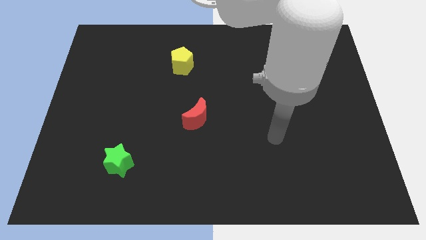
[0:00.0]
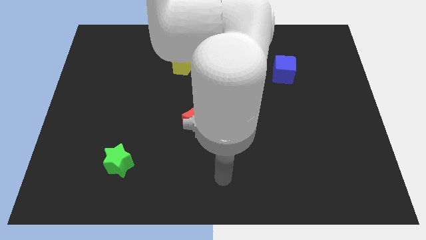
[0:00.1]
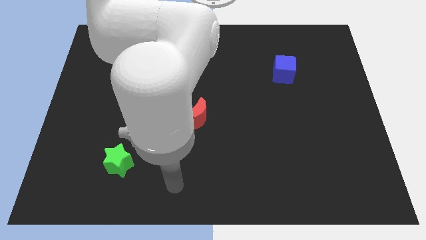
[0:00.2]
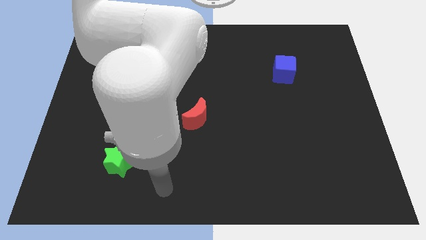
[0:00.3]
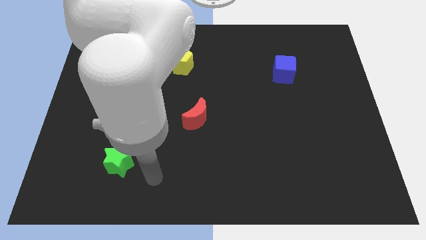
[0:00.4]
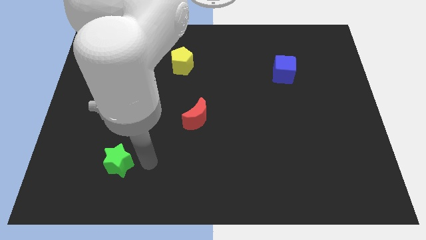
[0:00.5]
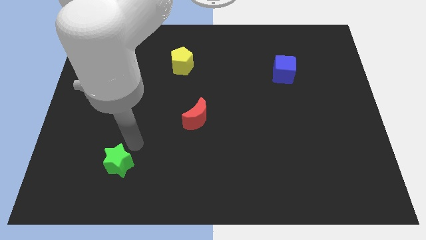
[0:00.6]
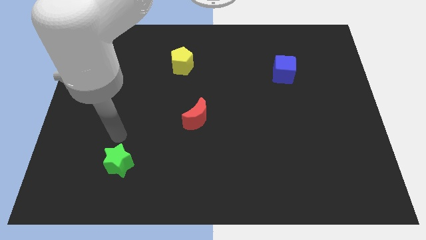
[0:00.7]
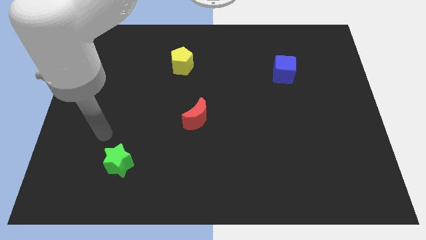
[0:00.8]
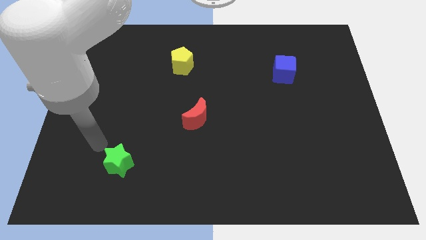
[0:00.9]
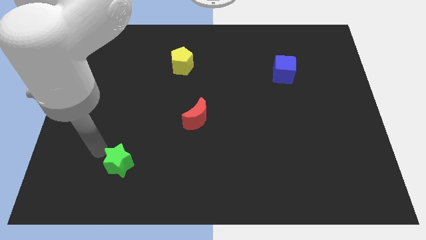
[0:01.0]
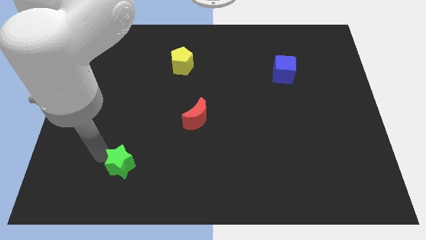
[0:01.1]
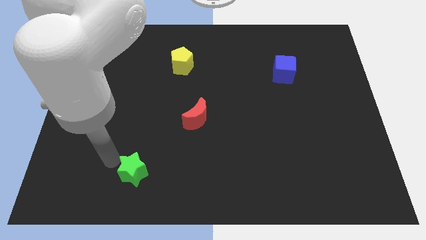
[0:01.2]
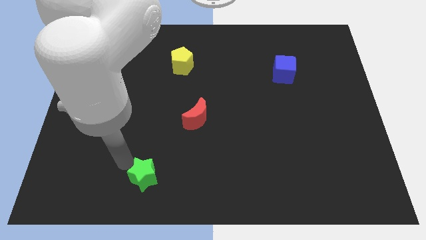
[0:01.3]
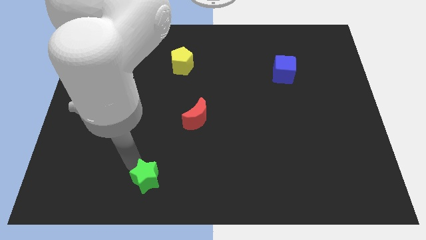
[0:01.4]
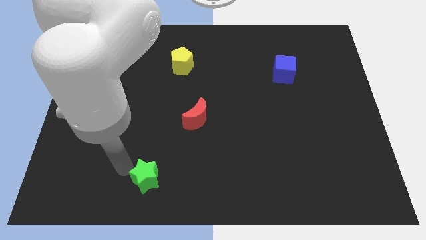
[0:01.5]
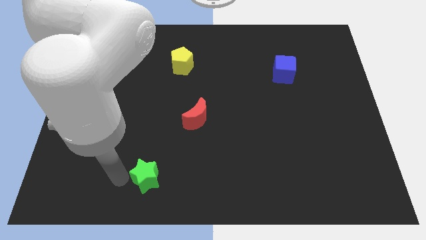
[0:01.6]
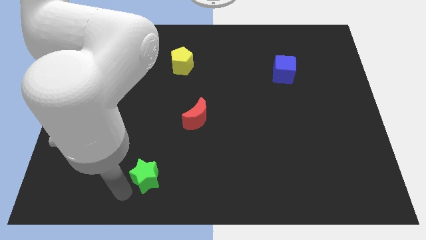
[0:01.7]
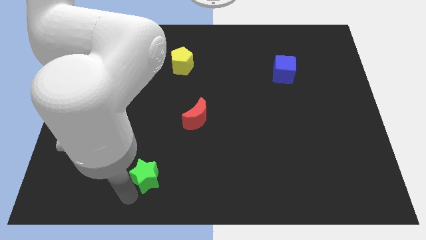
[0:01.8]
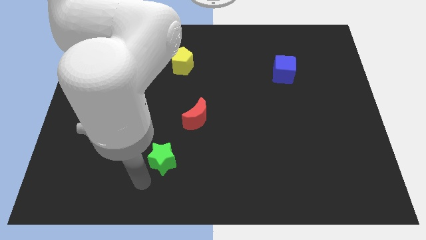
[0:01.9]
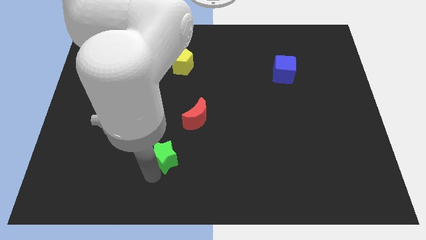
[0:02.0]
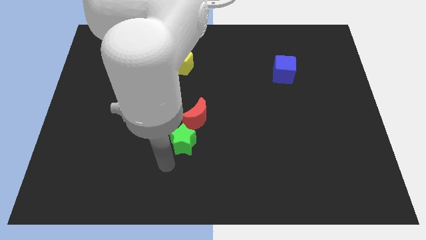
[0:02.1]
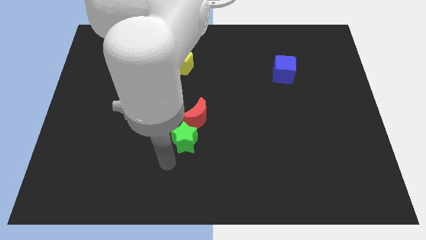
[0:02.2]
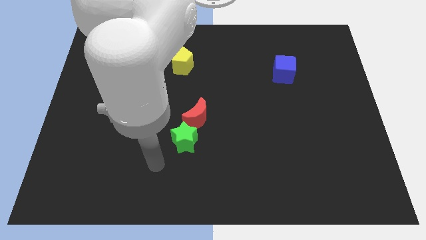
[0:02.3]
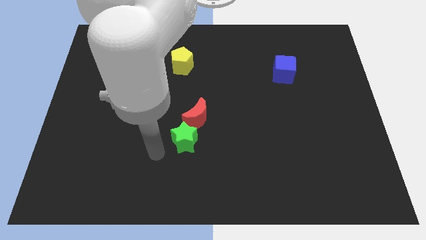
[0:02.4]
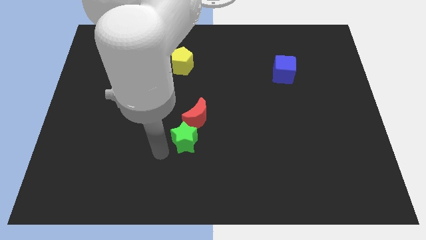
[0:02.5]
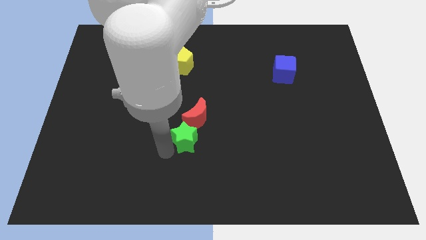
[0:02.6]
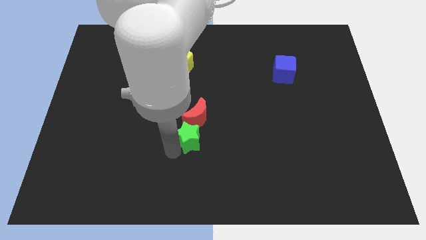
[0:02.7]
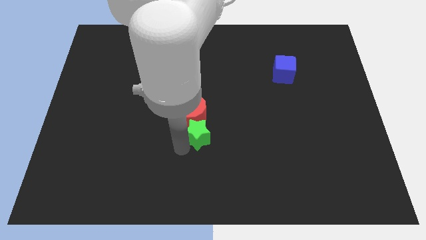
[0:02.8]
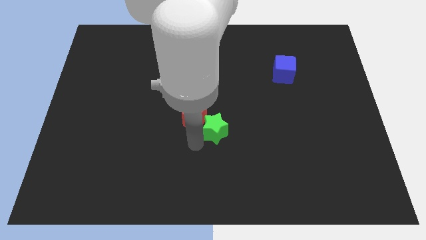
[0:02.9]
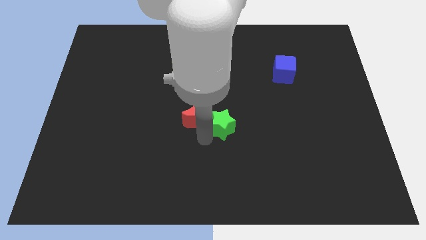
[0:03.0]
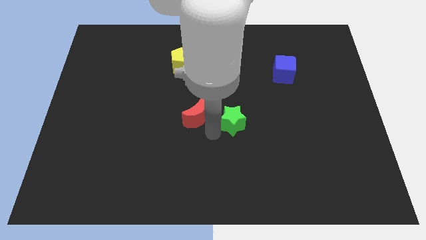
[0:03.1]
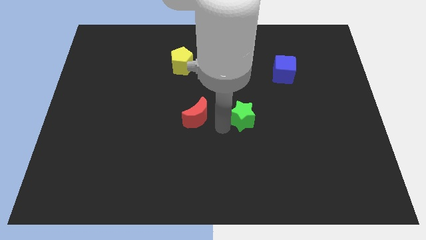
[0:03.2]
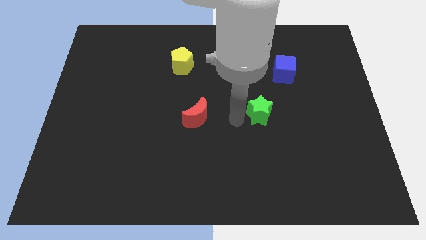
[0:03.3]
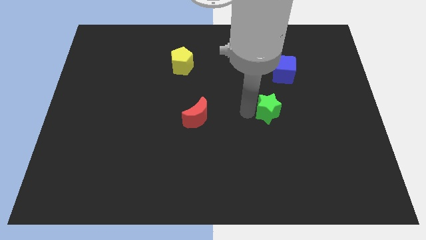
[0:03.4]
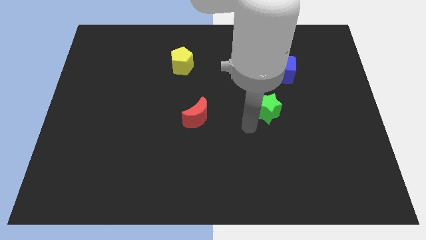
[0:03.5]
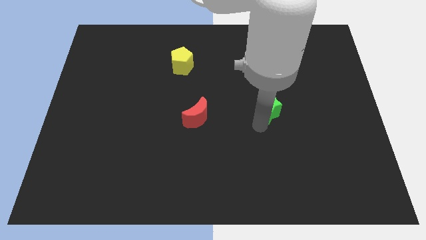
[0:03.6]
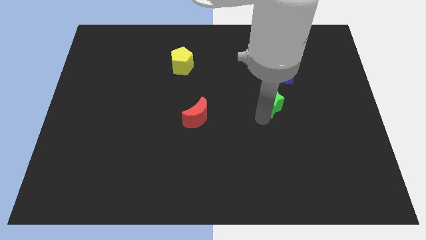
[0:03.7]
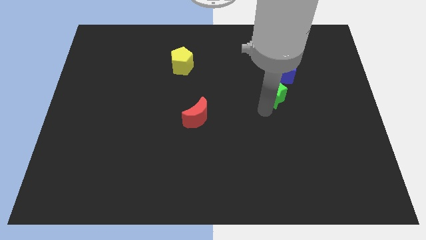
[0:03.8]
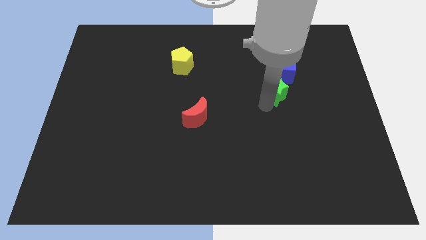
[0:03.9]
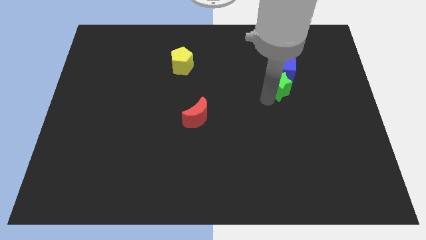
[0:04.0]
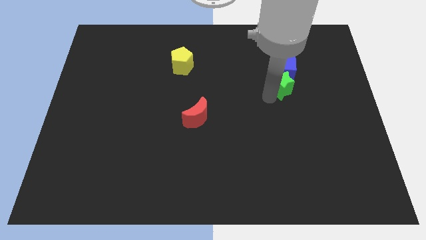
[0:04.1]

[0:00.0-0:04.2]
slide the green star next to the blue block

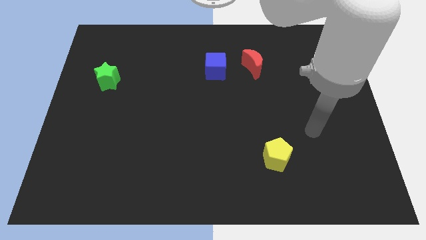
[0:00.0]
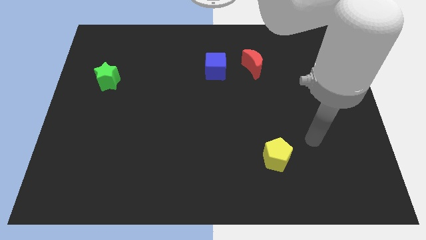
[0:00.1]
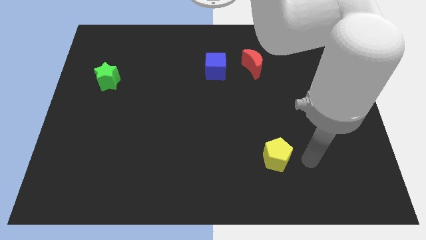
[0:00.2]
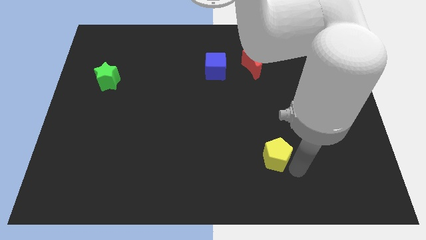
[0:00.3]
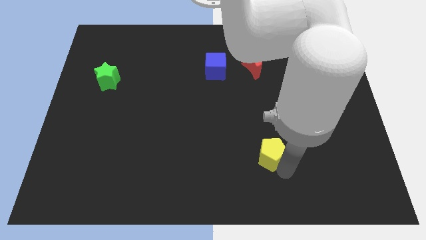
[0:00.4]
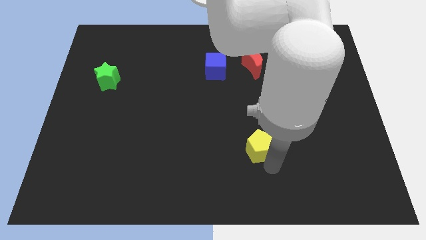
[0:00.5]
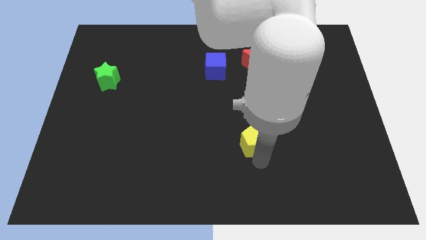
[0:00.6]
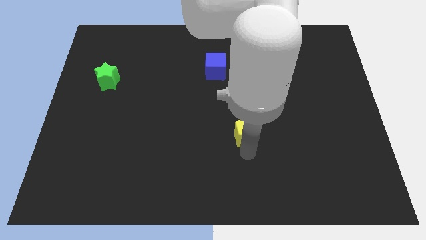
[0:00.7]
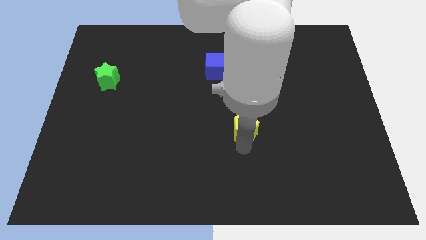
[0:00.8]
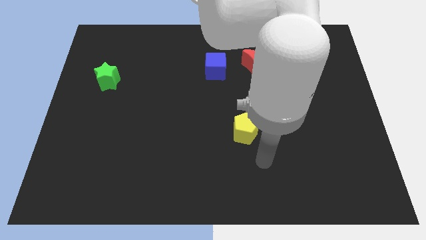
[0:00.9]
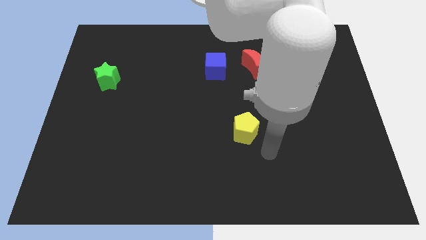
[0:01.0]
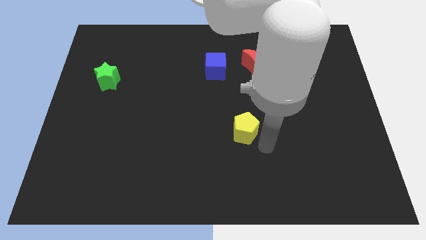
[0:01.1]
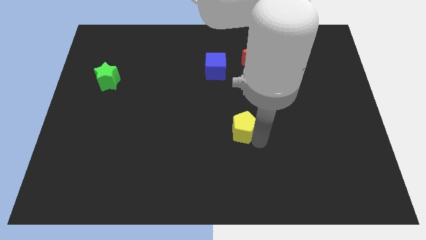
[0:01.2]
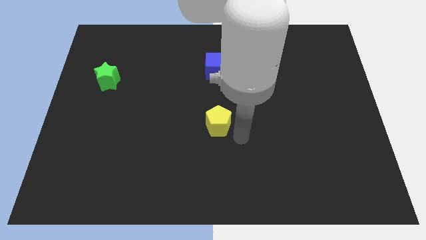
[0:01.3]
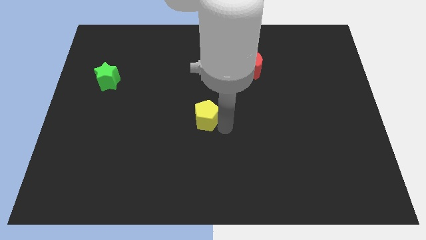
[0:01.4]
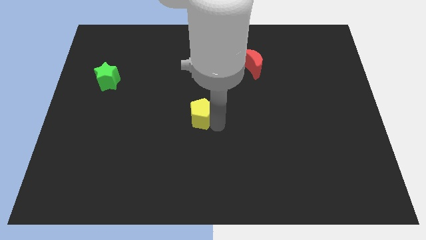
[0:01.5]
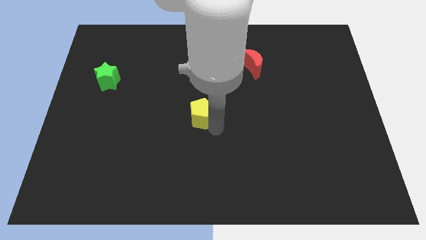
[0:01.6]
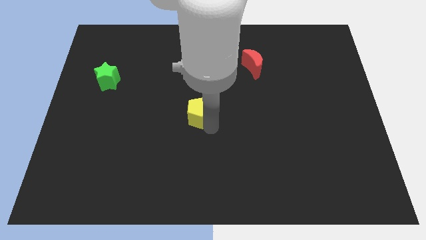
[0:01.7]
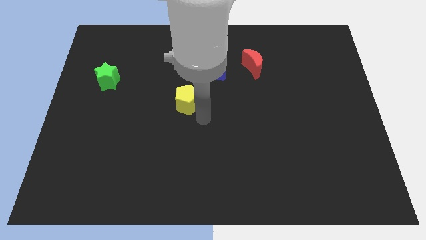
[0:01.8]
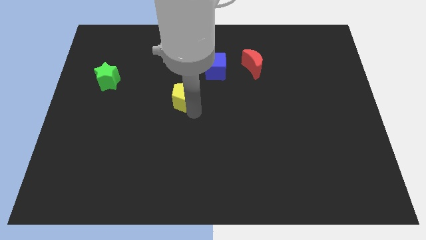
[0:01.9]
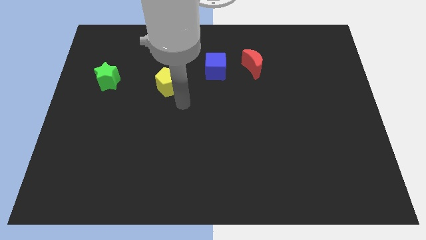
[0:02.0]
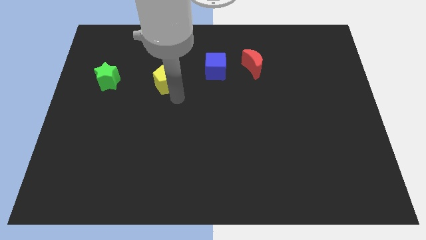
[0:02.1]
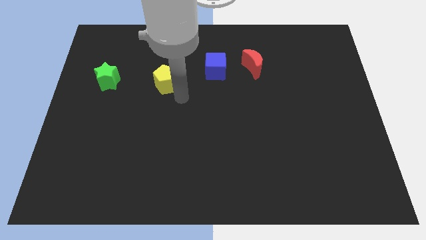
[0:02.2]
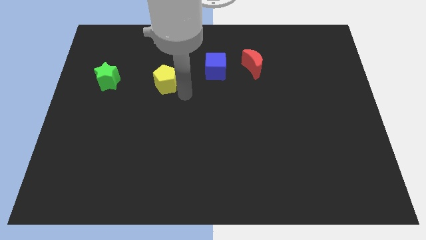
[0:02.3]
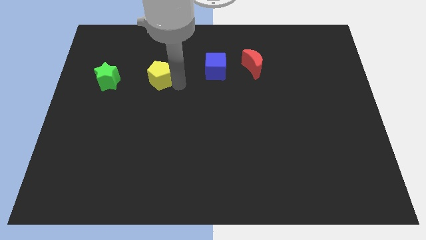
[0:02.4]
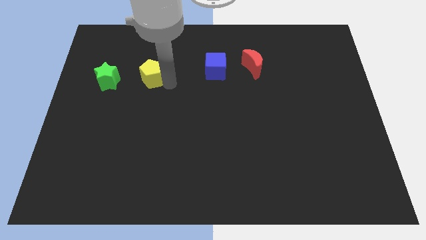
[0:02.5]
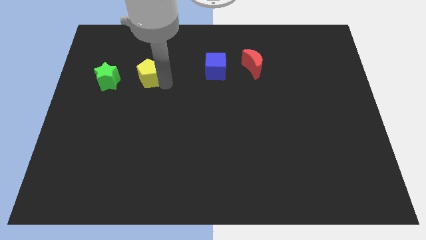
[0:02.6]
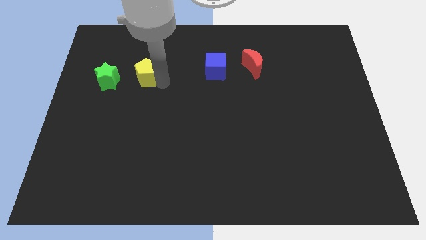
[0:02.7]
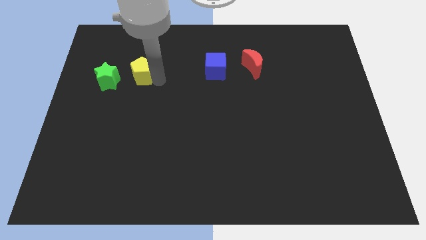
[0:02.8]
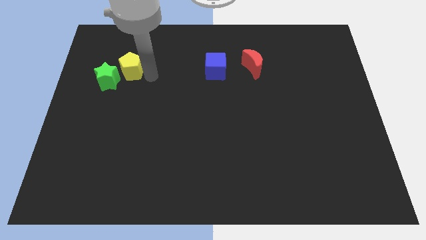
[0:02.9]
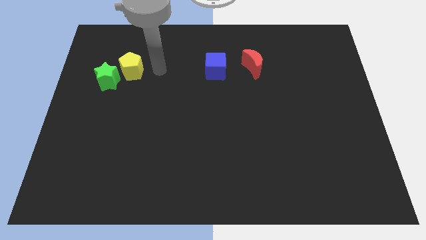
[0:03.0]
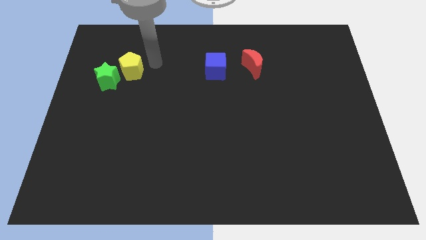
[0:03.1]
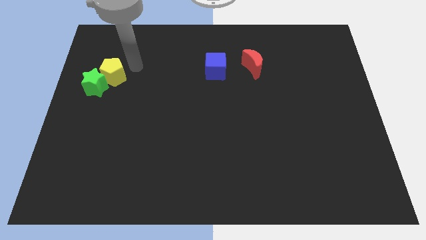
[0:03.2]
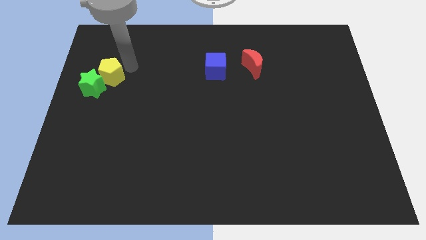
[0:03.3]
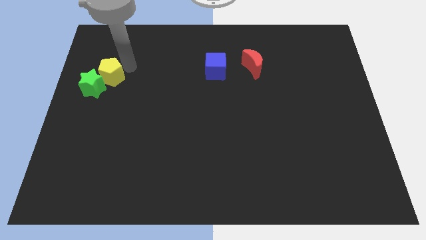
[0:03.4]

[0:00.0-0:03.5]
push the pentagon towards the green block

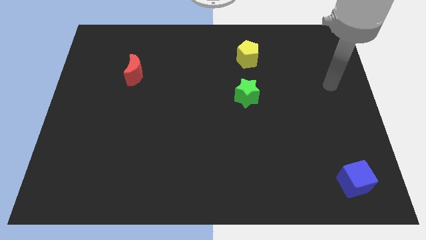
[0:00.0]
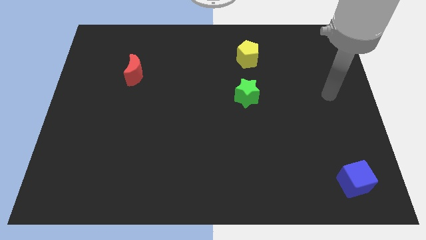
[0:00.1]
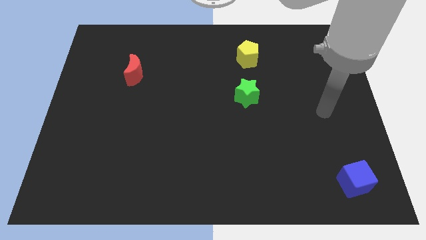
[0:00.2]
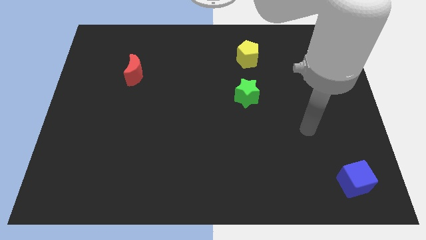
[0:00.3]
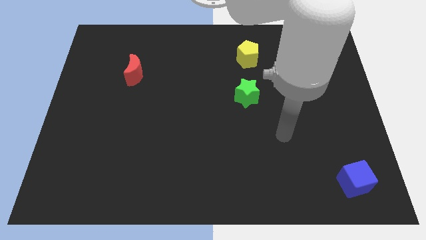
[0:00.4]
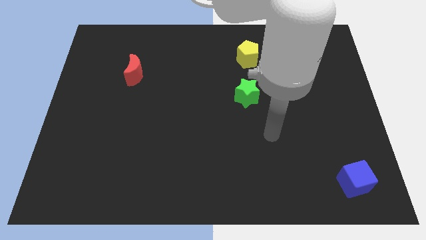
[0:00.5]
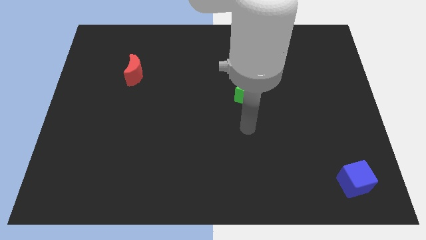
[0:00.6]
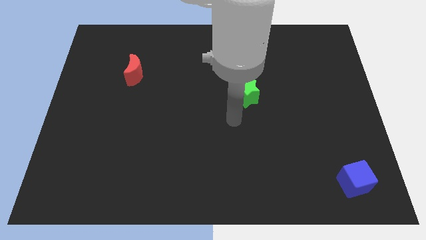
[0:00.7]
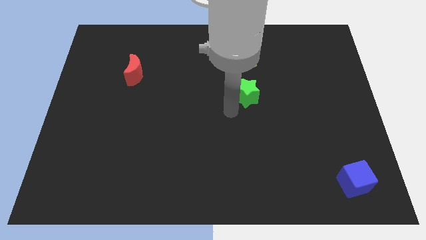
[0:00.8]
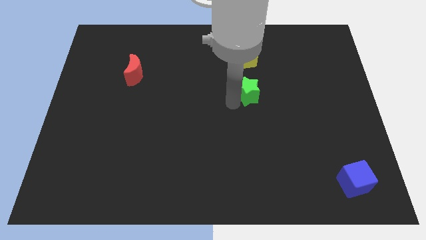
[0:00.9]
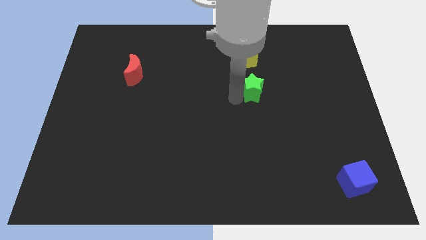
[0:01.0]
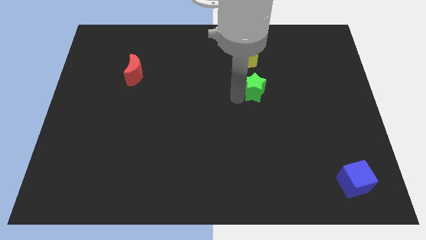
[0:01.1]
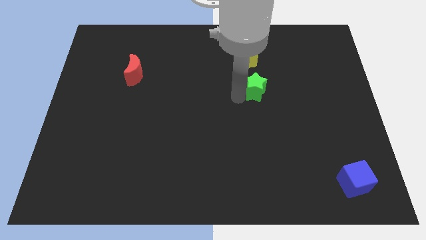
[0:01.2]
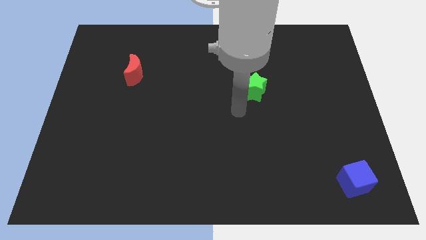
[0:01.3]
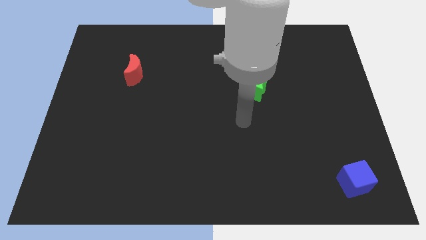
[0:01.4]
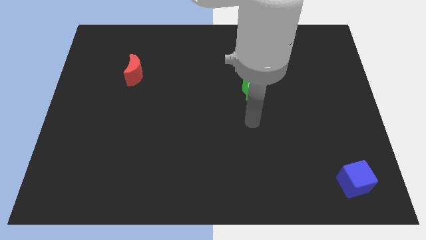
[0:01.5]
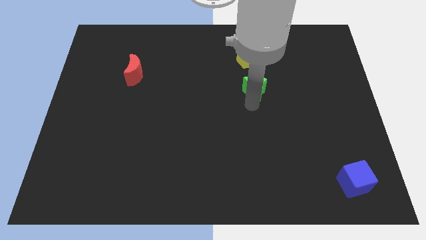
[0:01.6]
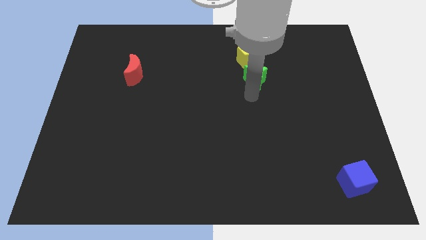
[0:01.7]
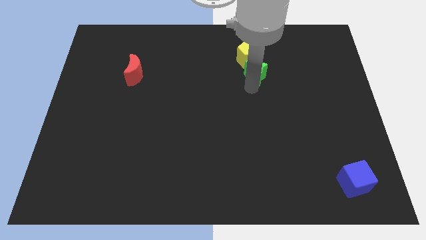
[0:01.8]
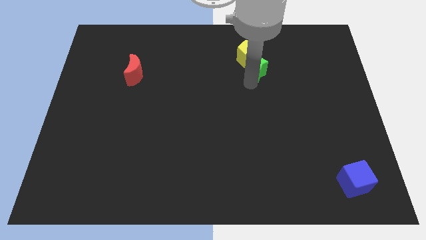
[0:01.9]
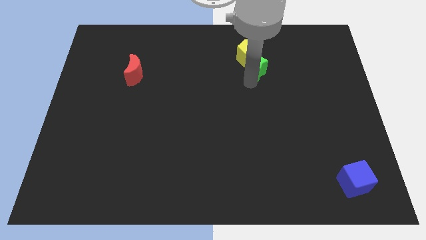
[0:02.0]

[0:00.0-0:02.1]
move the green star next to the pentagon
